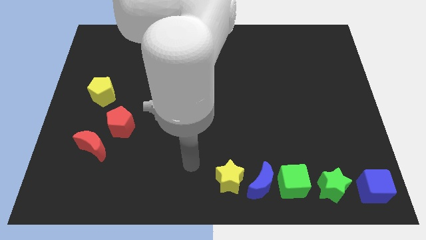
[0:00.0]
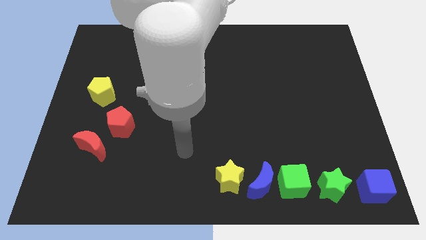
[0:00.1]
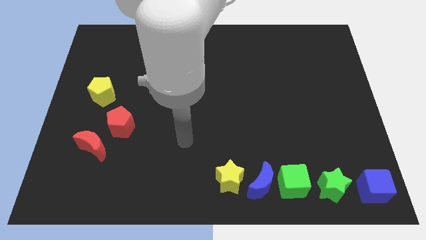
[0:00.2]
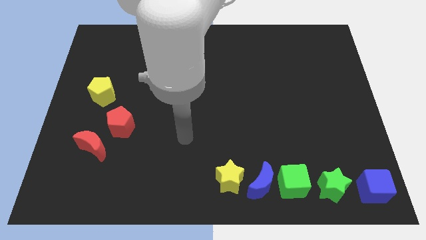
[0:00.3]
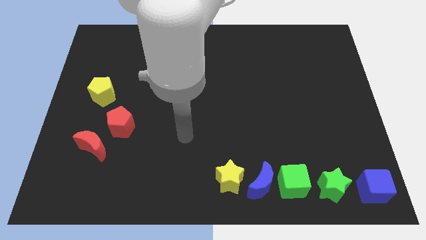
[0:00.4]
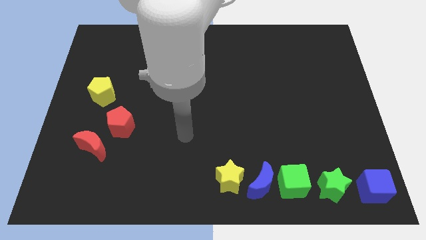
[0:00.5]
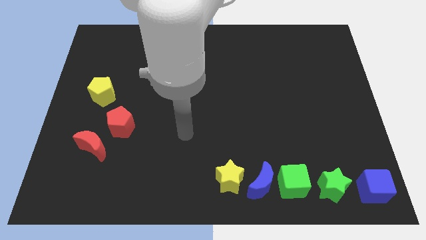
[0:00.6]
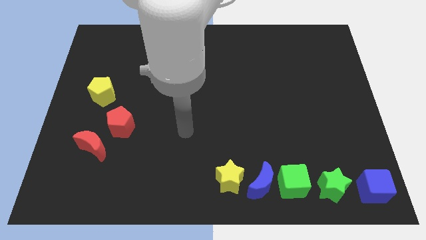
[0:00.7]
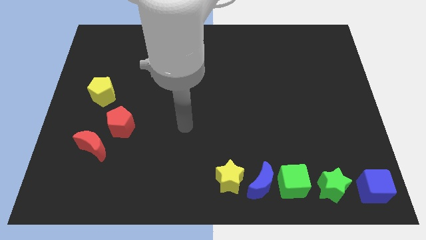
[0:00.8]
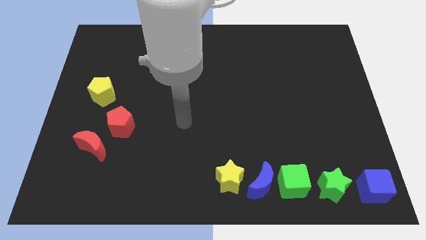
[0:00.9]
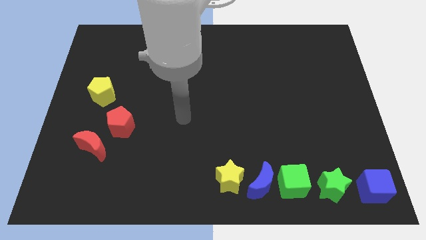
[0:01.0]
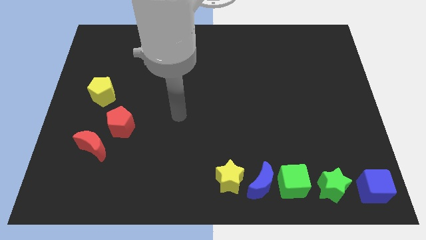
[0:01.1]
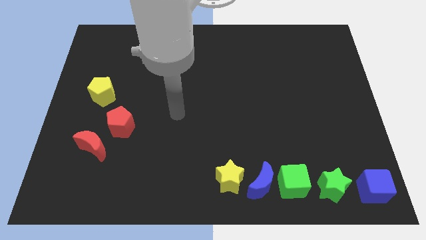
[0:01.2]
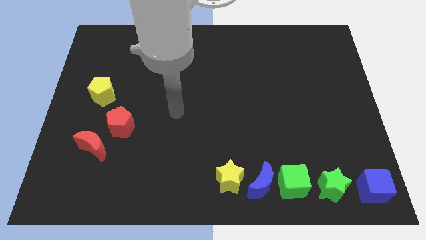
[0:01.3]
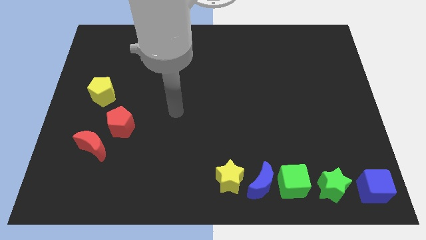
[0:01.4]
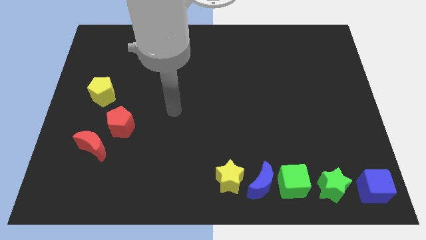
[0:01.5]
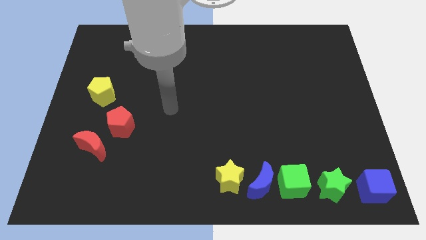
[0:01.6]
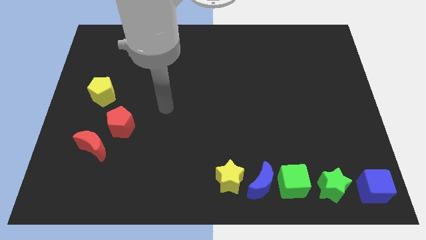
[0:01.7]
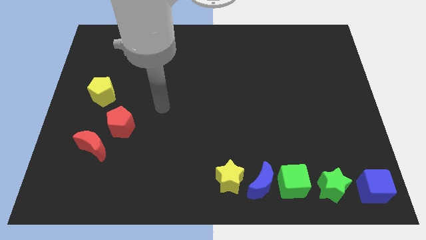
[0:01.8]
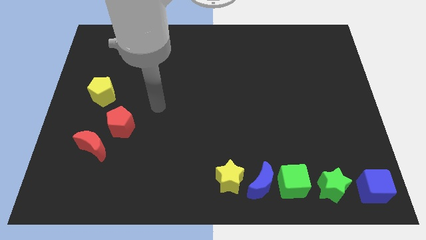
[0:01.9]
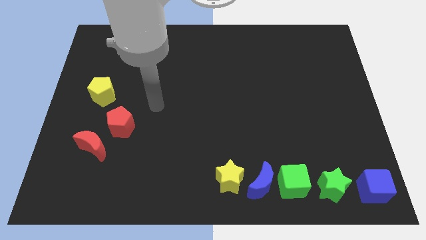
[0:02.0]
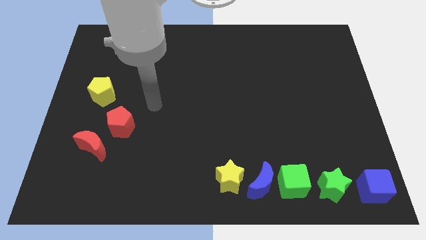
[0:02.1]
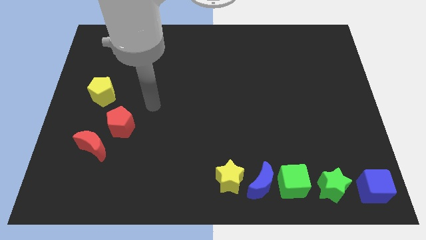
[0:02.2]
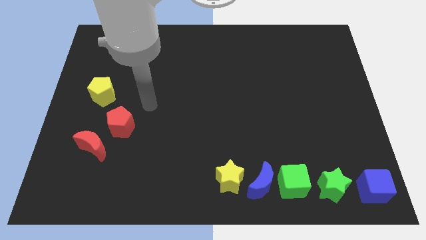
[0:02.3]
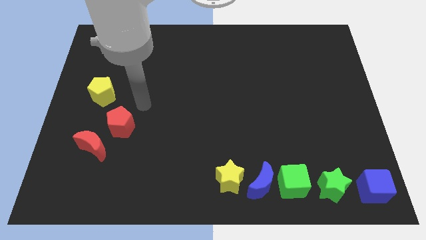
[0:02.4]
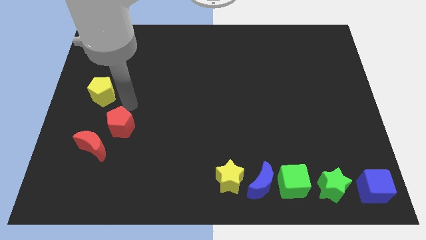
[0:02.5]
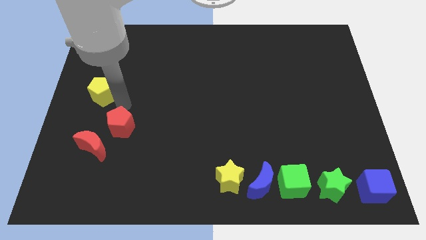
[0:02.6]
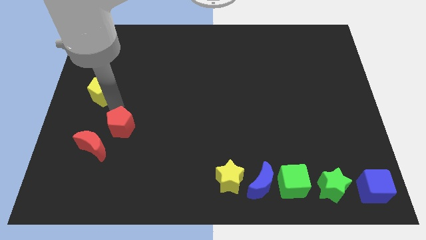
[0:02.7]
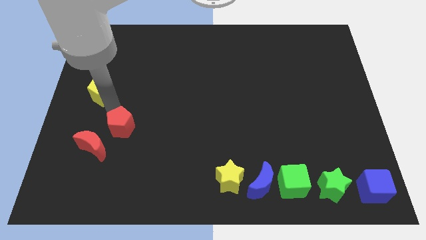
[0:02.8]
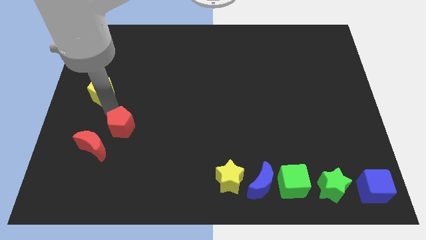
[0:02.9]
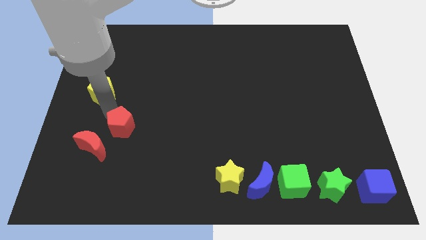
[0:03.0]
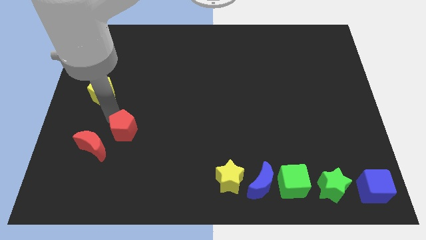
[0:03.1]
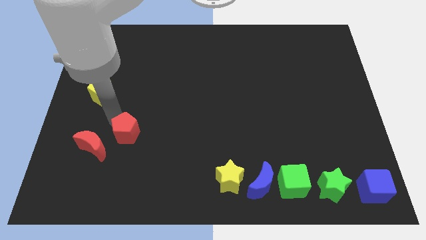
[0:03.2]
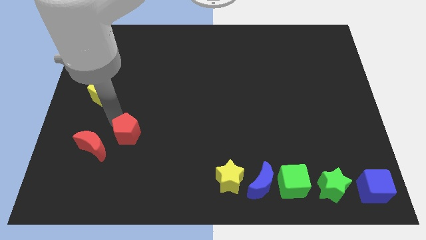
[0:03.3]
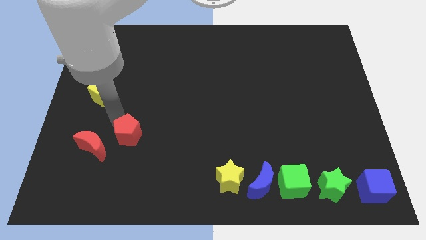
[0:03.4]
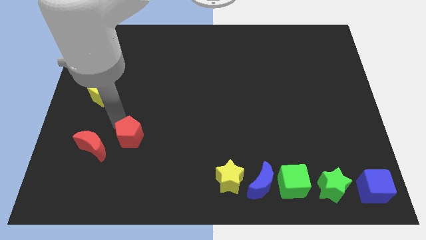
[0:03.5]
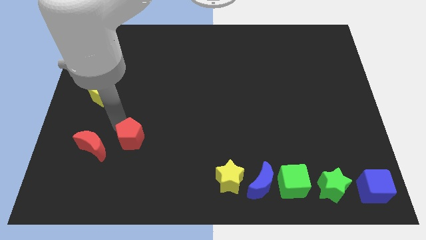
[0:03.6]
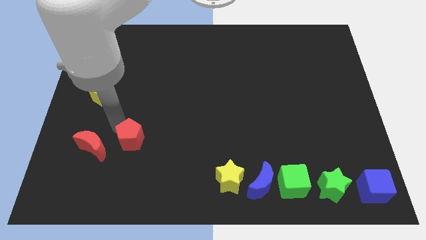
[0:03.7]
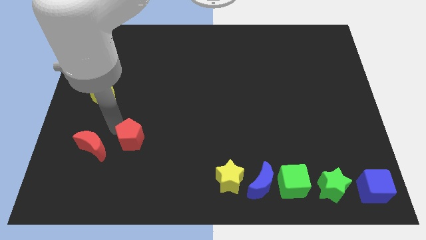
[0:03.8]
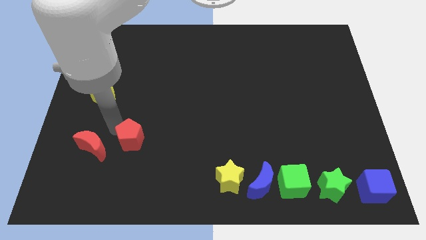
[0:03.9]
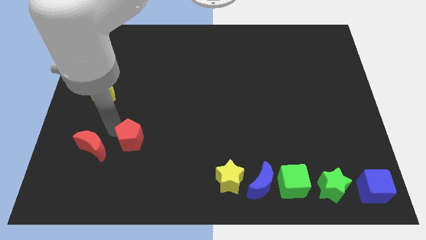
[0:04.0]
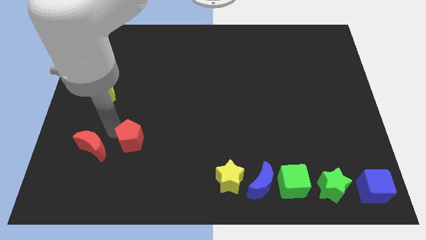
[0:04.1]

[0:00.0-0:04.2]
push red pentagon to the right of red crescent

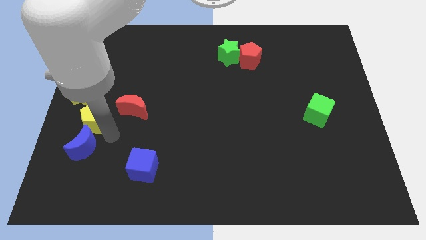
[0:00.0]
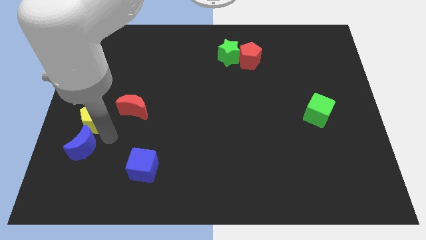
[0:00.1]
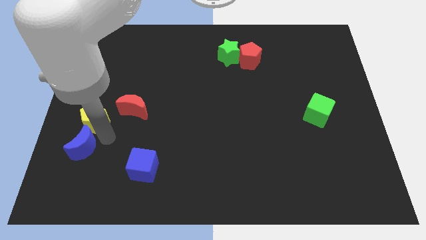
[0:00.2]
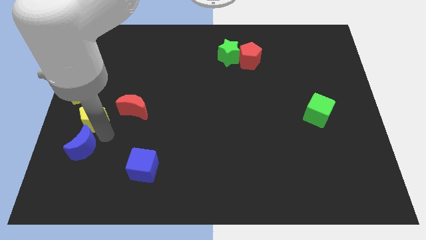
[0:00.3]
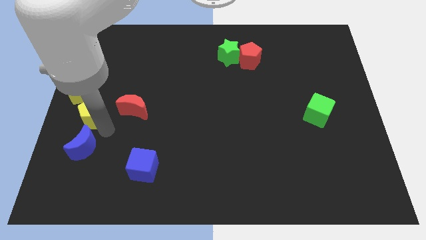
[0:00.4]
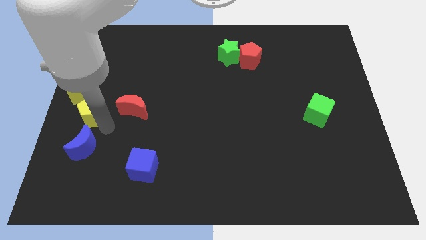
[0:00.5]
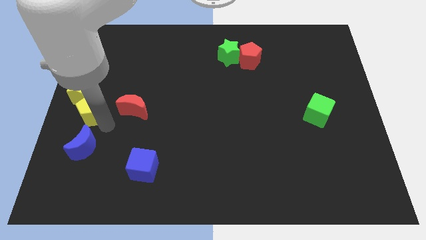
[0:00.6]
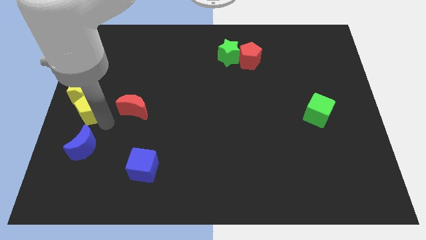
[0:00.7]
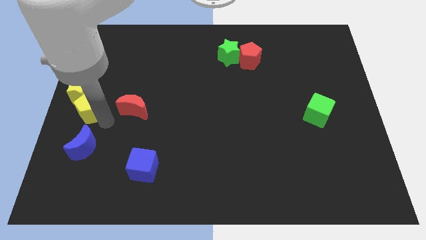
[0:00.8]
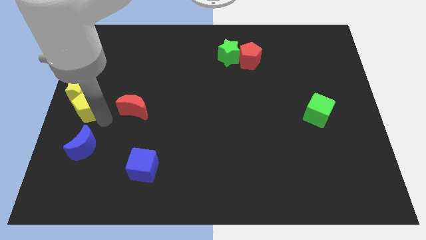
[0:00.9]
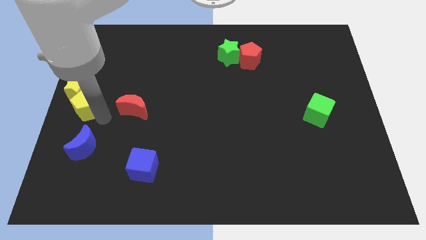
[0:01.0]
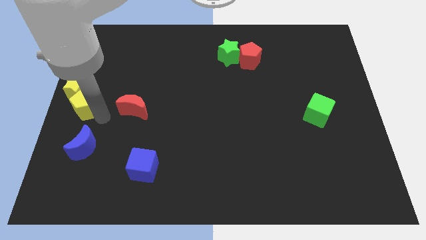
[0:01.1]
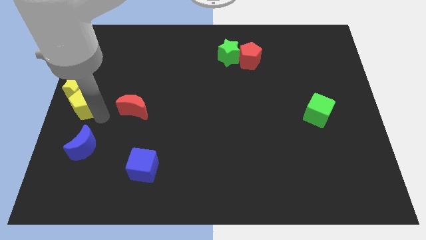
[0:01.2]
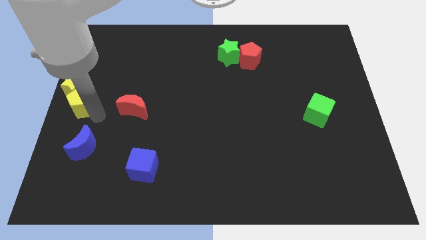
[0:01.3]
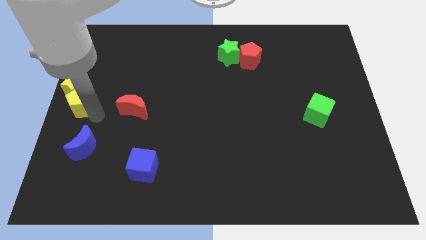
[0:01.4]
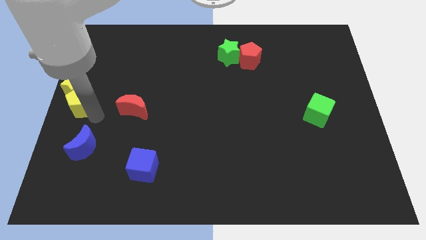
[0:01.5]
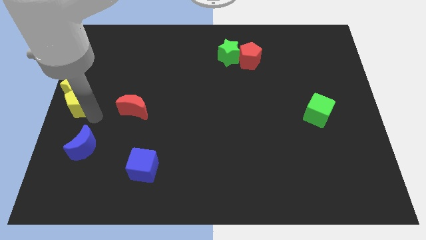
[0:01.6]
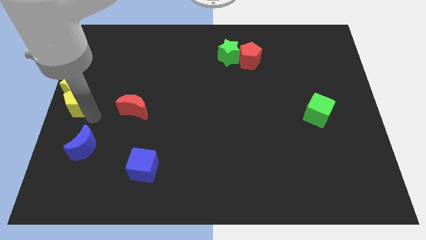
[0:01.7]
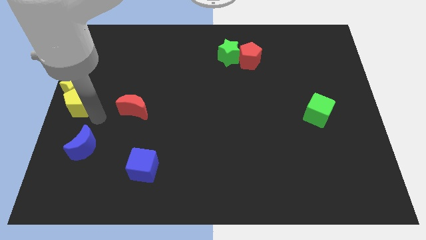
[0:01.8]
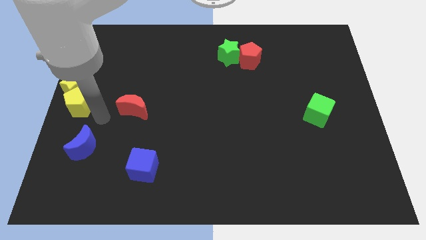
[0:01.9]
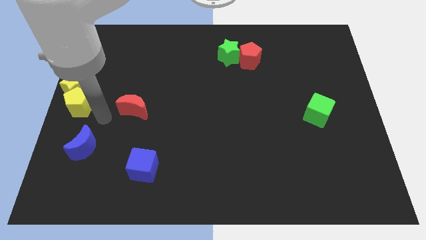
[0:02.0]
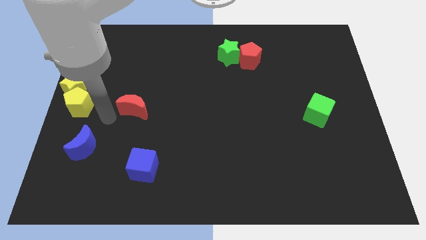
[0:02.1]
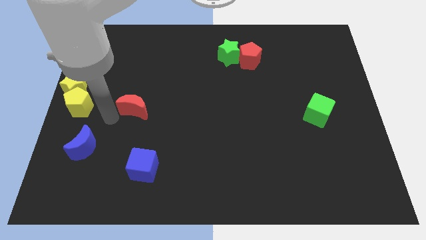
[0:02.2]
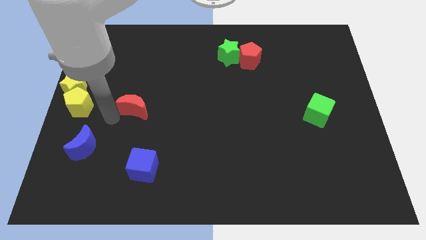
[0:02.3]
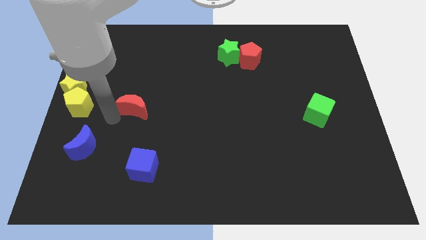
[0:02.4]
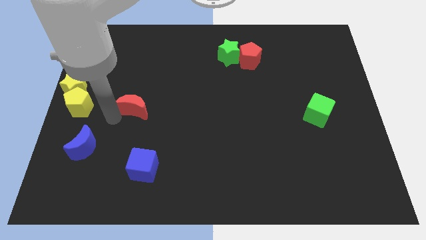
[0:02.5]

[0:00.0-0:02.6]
move the yellow pentagon to the left center of the board

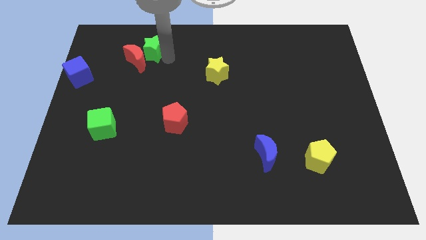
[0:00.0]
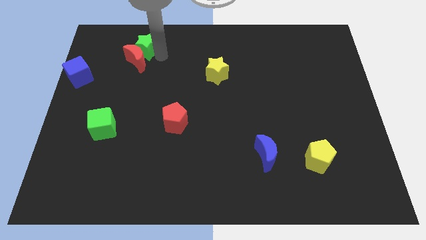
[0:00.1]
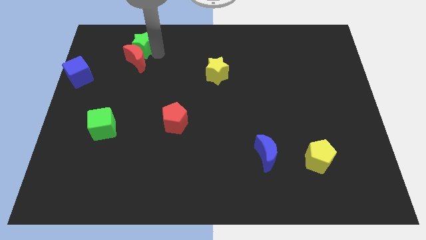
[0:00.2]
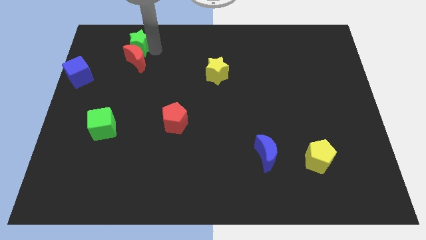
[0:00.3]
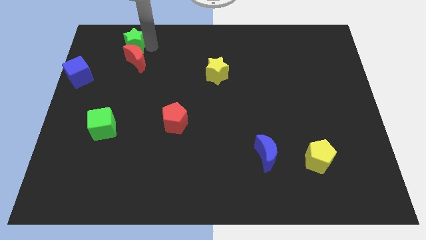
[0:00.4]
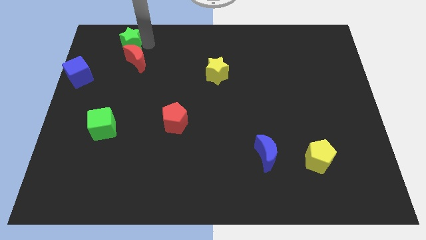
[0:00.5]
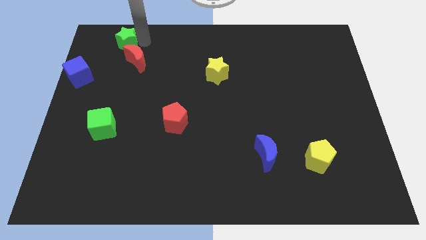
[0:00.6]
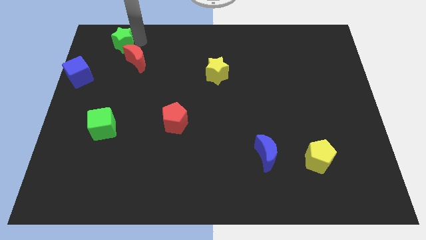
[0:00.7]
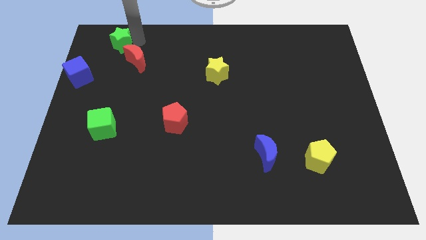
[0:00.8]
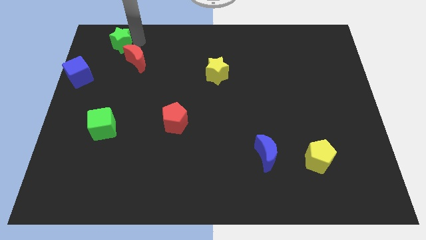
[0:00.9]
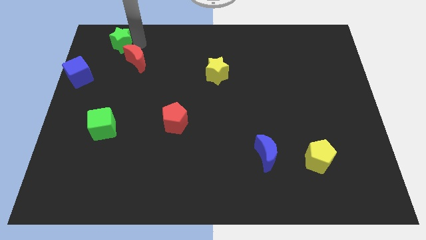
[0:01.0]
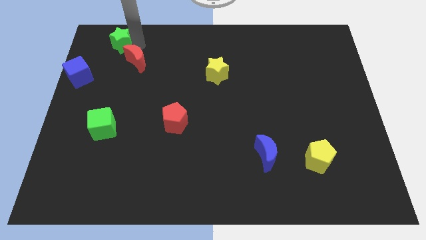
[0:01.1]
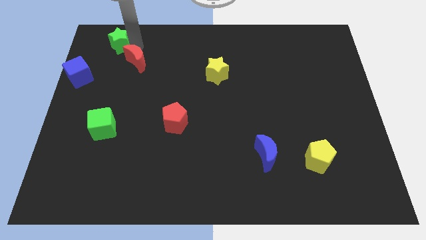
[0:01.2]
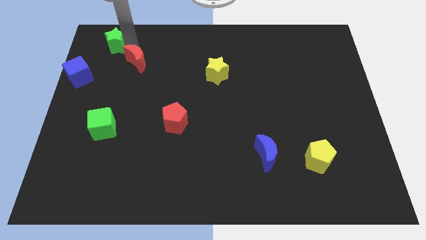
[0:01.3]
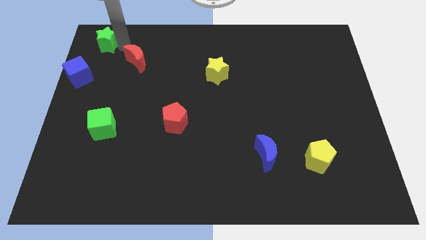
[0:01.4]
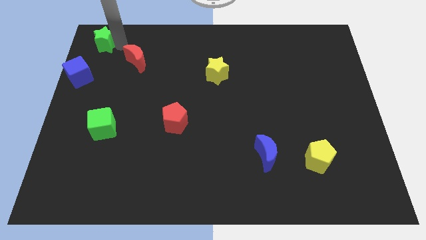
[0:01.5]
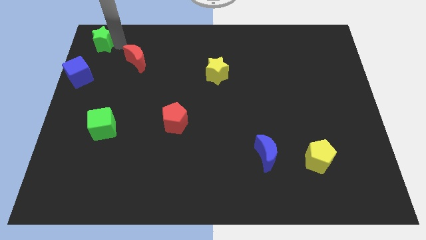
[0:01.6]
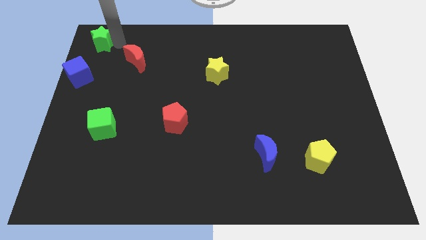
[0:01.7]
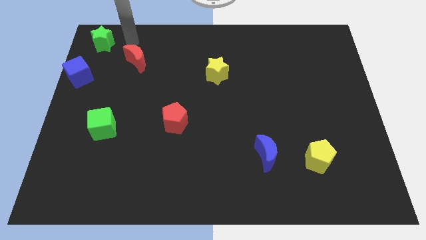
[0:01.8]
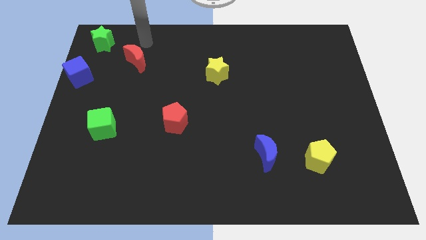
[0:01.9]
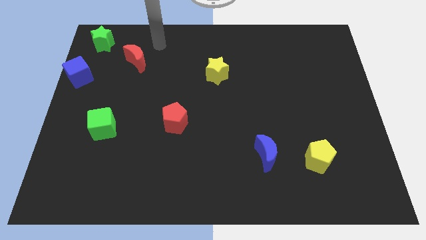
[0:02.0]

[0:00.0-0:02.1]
place the green star diagonal right of blue cube
